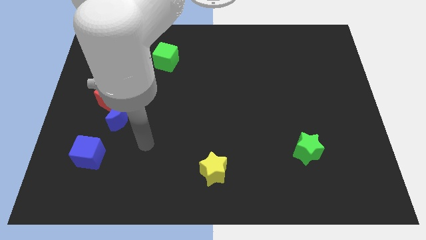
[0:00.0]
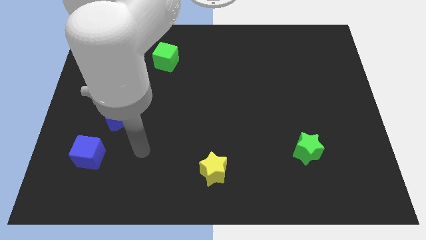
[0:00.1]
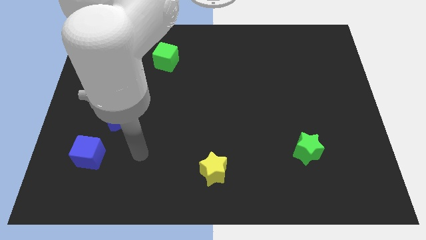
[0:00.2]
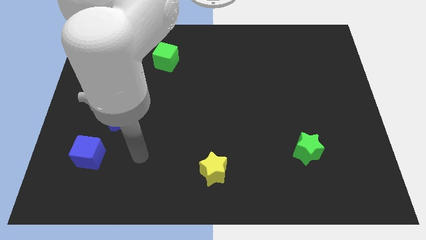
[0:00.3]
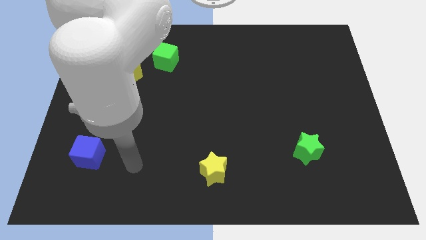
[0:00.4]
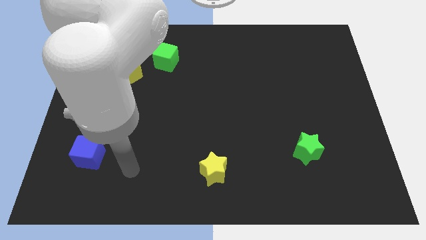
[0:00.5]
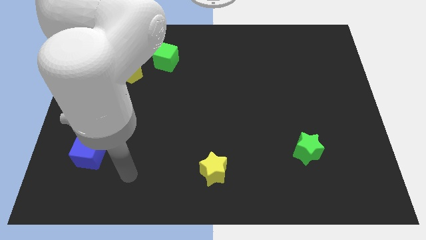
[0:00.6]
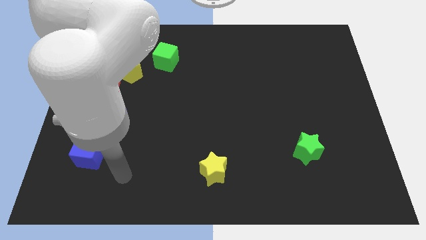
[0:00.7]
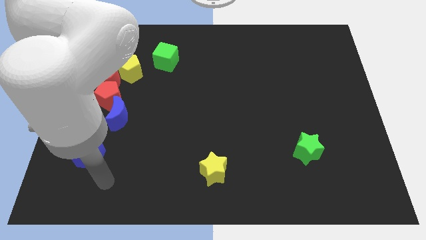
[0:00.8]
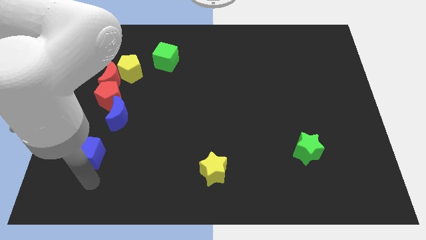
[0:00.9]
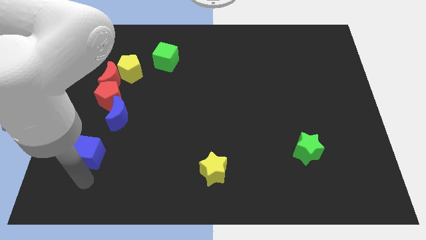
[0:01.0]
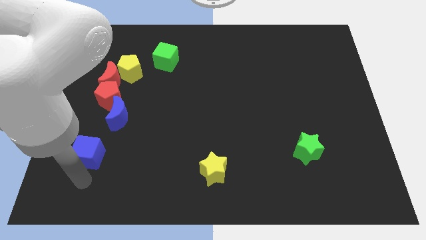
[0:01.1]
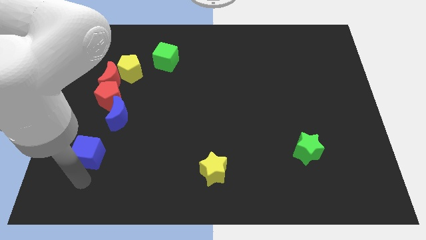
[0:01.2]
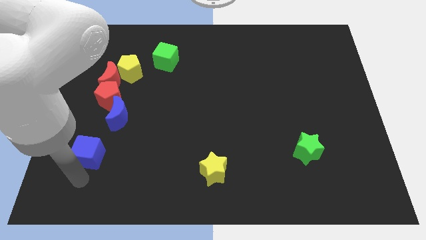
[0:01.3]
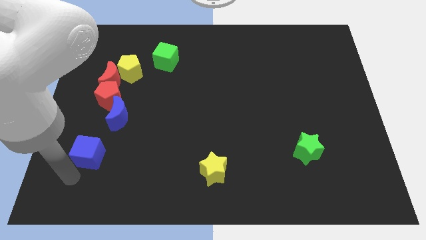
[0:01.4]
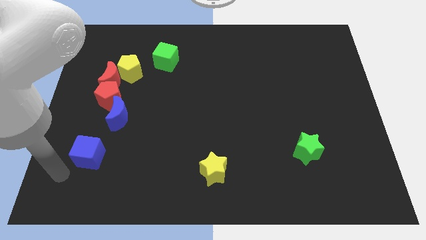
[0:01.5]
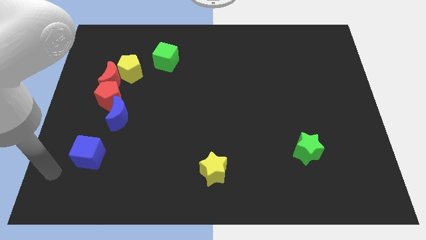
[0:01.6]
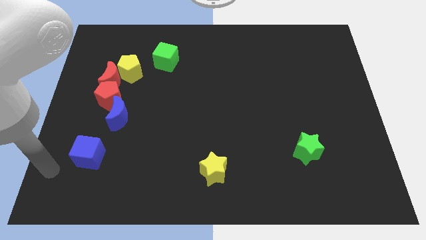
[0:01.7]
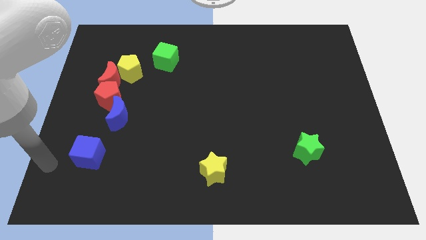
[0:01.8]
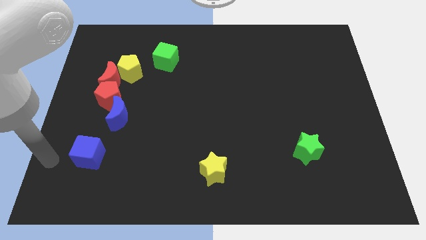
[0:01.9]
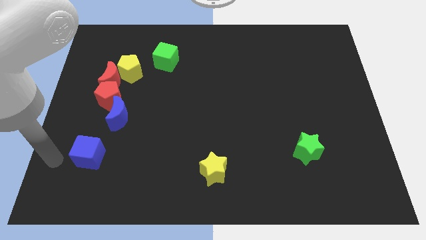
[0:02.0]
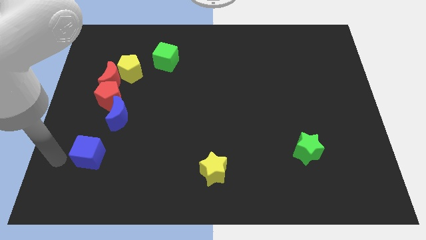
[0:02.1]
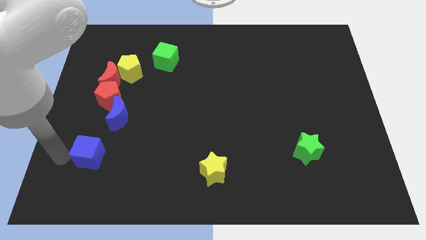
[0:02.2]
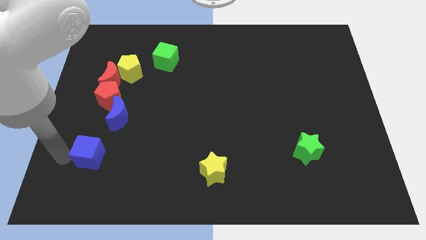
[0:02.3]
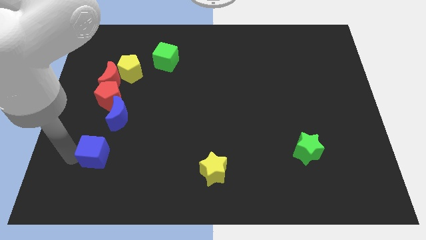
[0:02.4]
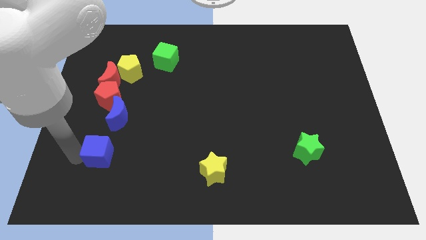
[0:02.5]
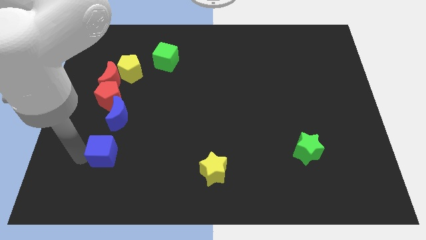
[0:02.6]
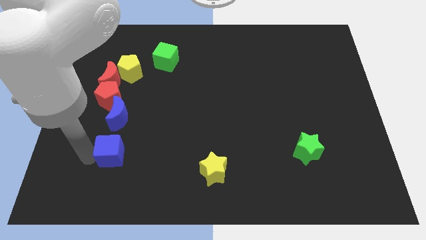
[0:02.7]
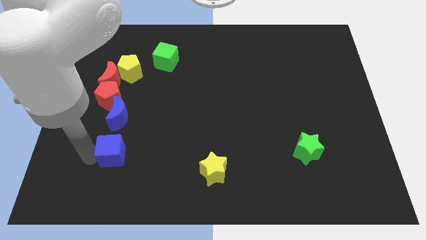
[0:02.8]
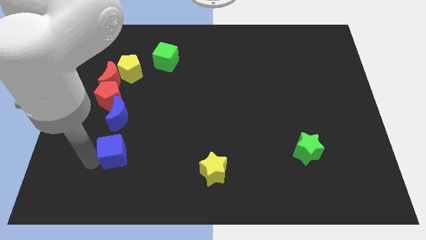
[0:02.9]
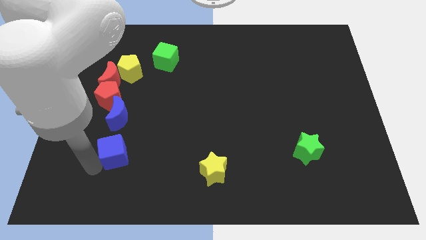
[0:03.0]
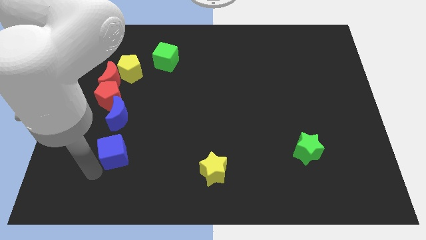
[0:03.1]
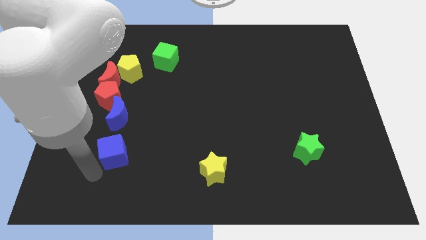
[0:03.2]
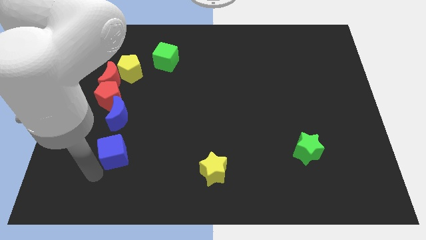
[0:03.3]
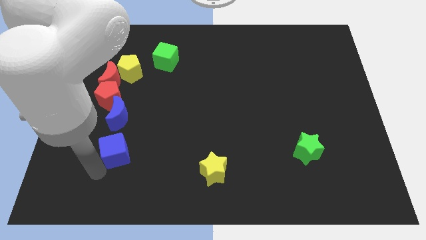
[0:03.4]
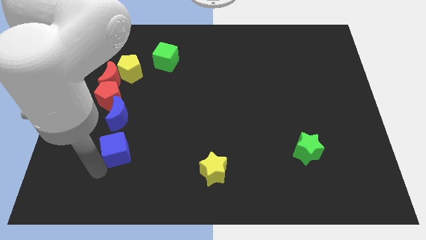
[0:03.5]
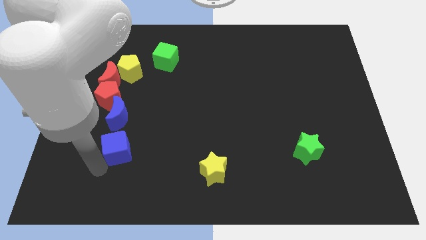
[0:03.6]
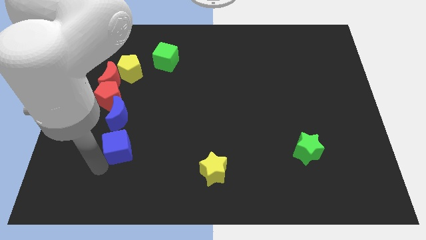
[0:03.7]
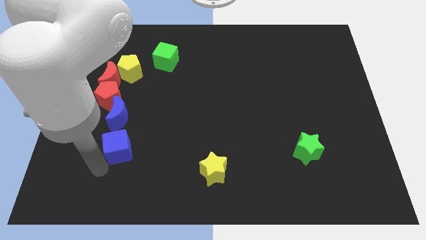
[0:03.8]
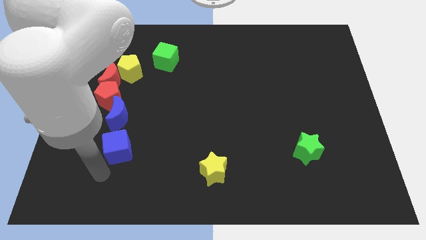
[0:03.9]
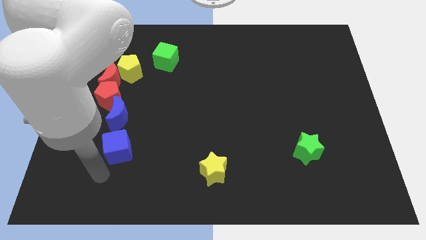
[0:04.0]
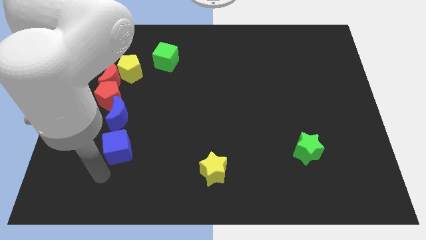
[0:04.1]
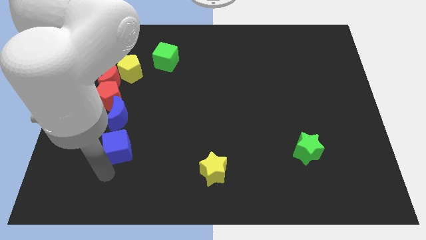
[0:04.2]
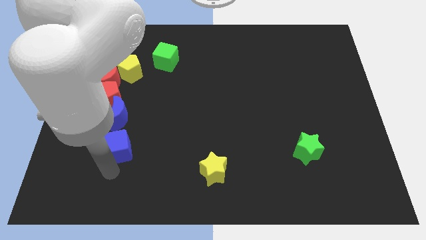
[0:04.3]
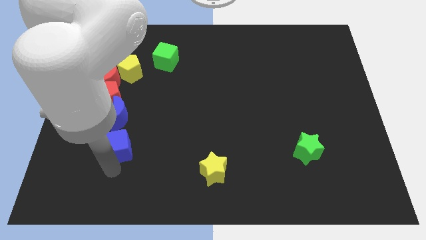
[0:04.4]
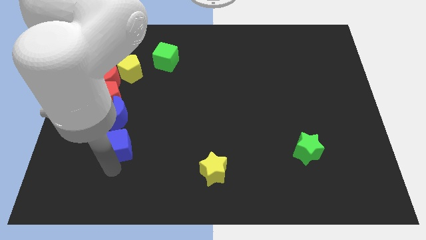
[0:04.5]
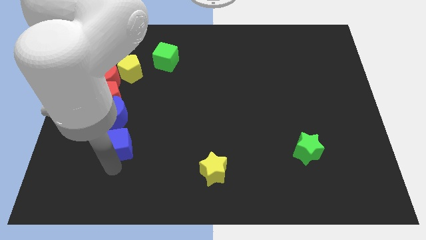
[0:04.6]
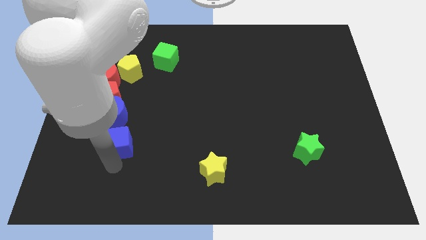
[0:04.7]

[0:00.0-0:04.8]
push the blue cube to the bottom of the blue crescent

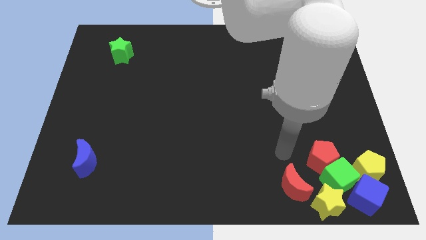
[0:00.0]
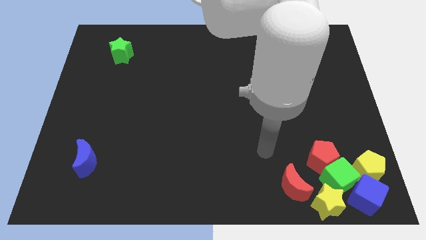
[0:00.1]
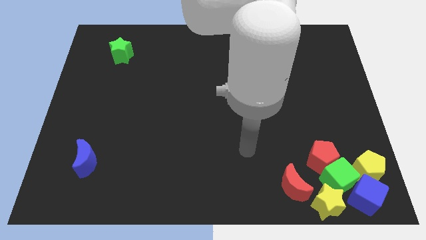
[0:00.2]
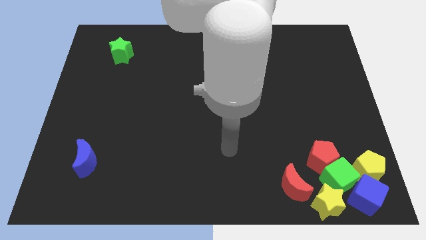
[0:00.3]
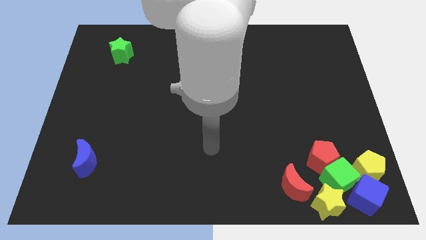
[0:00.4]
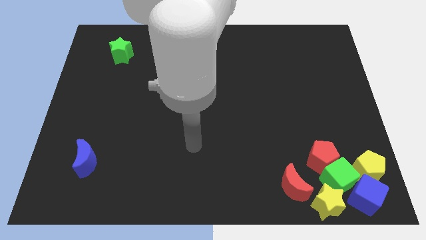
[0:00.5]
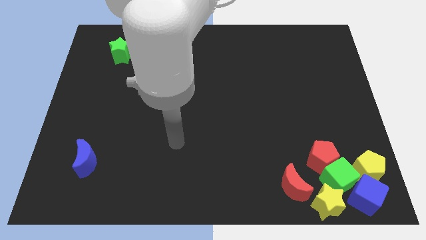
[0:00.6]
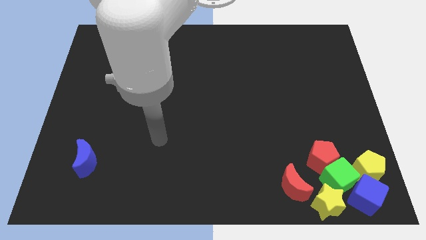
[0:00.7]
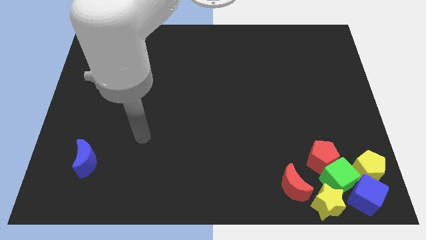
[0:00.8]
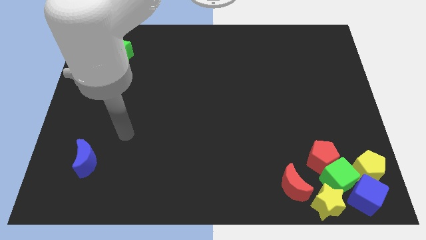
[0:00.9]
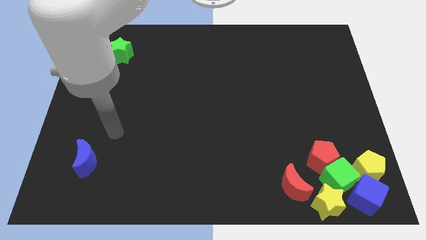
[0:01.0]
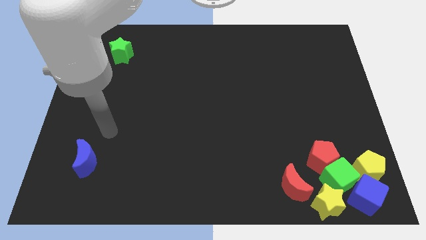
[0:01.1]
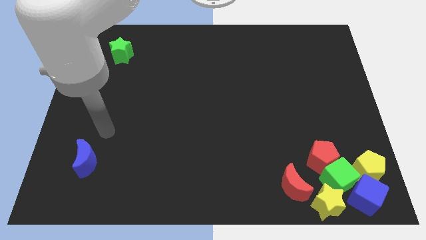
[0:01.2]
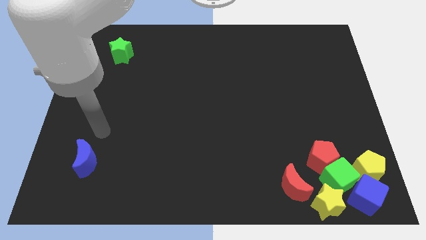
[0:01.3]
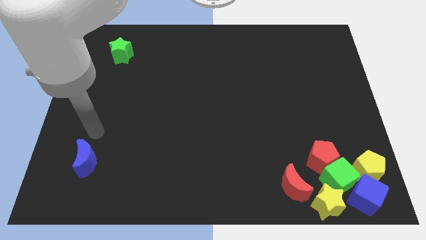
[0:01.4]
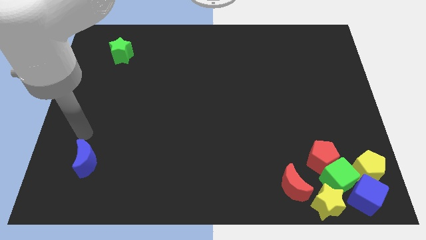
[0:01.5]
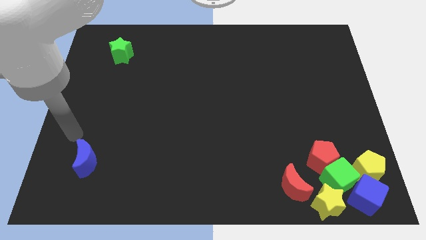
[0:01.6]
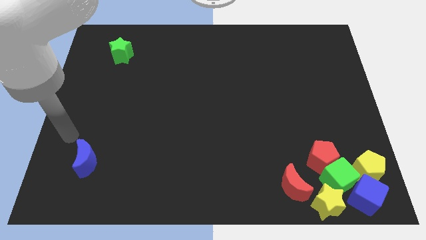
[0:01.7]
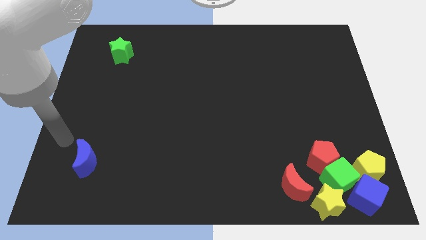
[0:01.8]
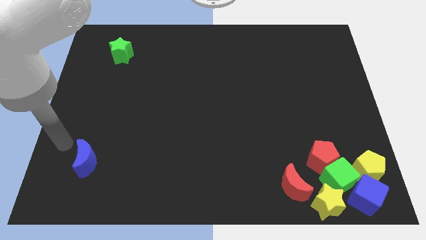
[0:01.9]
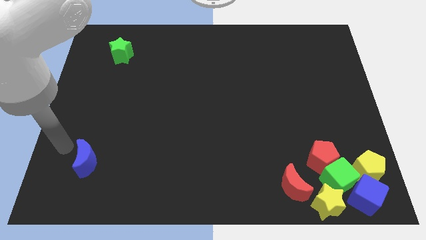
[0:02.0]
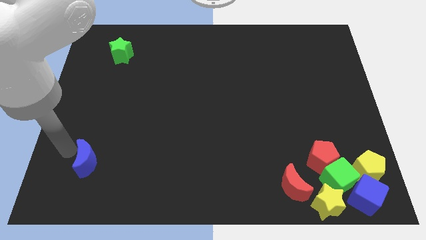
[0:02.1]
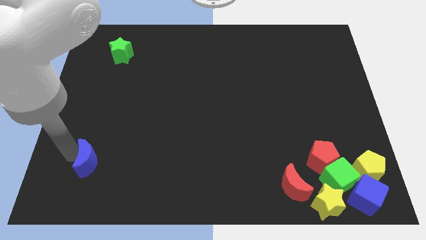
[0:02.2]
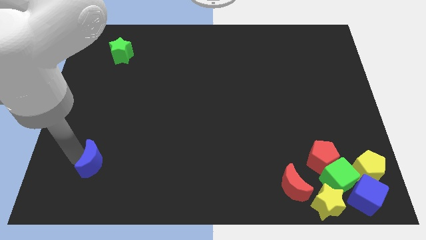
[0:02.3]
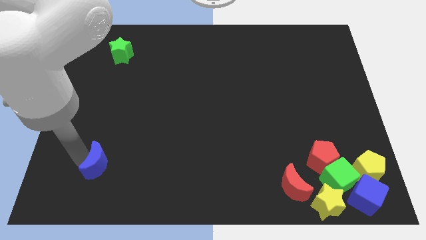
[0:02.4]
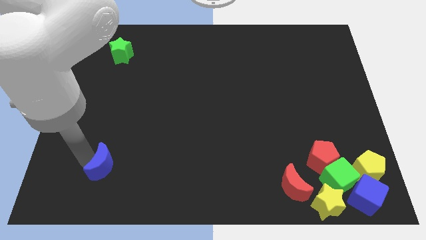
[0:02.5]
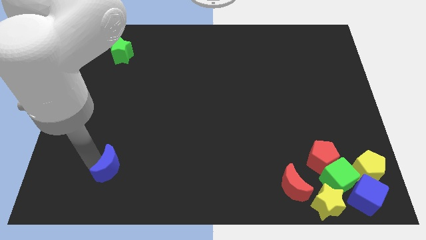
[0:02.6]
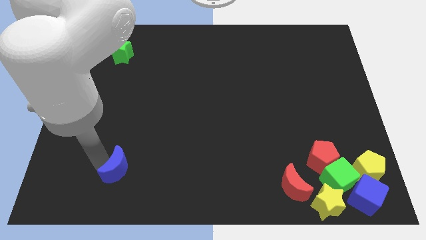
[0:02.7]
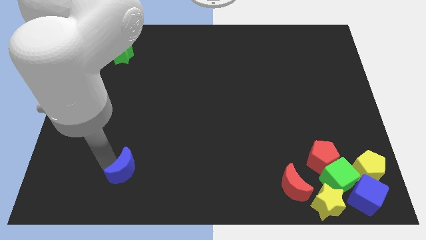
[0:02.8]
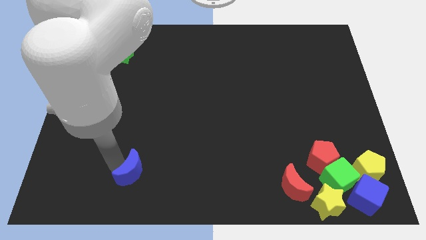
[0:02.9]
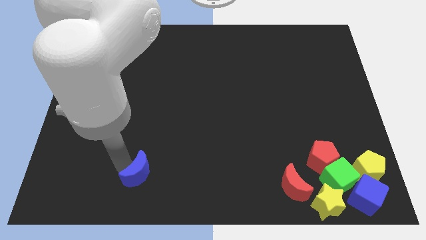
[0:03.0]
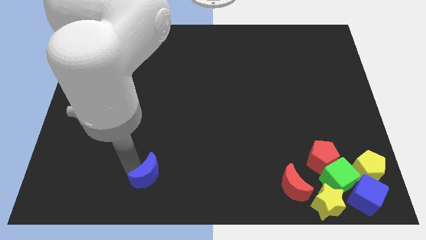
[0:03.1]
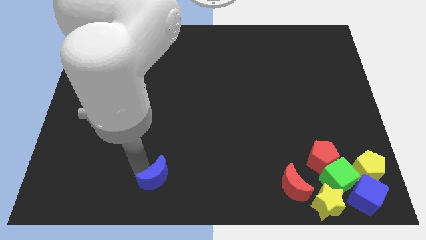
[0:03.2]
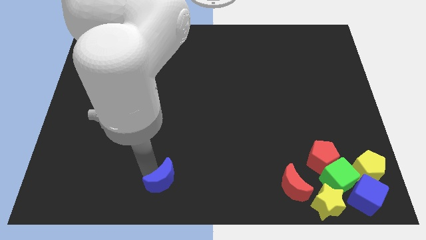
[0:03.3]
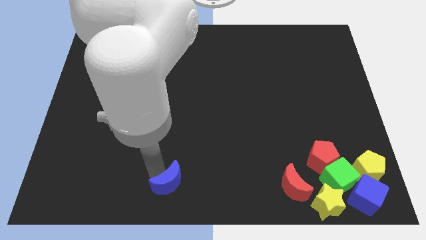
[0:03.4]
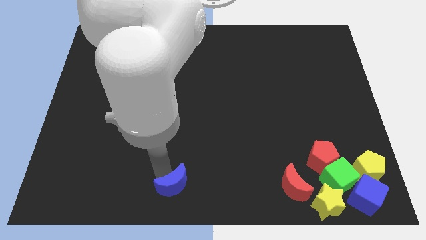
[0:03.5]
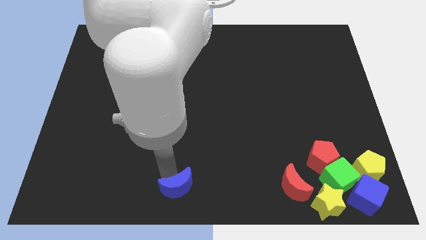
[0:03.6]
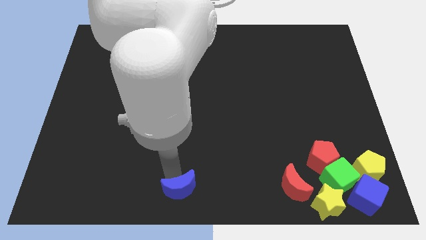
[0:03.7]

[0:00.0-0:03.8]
move the blue crescent parallel to the group of blocks

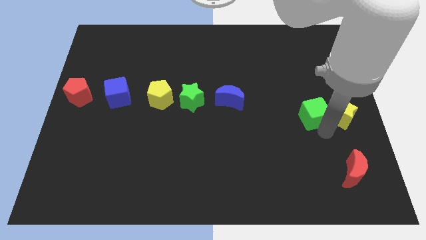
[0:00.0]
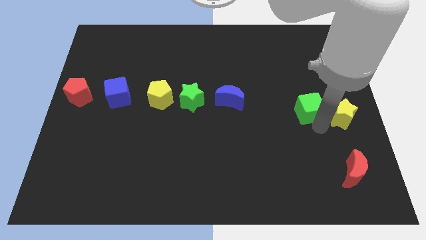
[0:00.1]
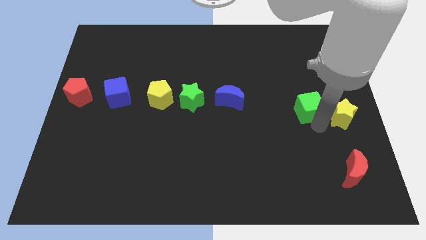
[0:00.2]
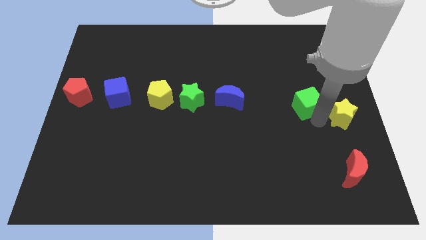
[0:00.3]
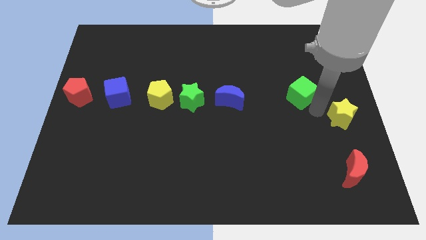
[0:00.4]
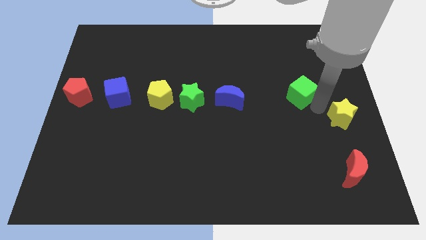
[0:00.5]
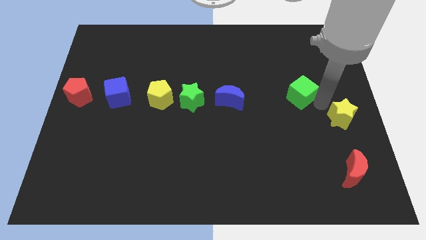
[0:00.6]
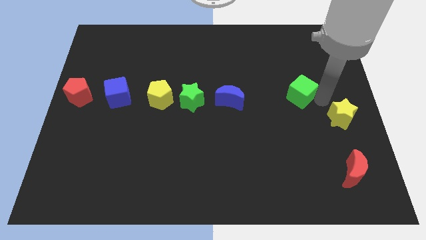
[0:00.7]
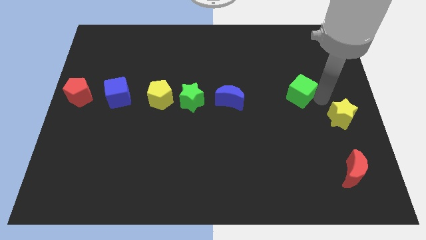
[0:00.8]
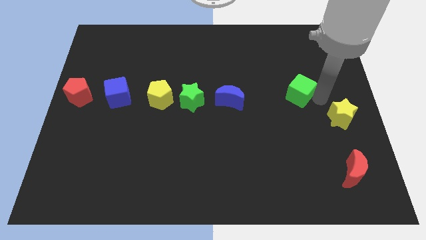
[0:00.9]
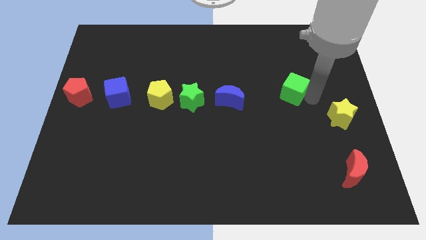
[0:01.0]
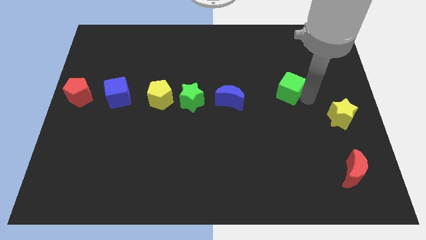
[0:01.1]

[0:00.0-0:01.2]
place the green cube to the top left of the yellow star
